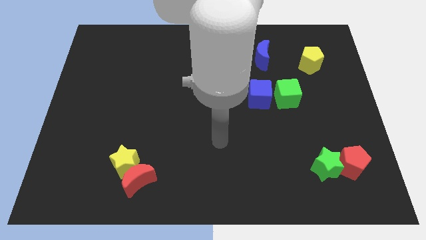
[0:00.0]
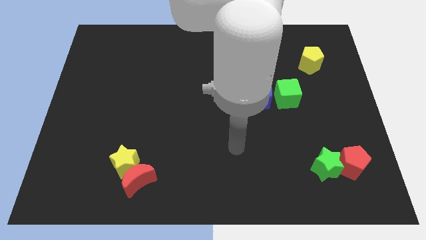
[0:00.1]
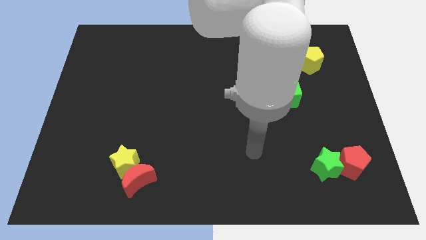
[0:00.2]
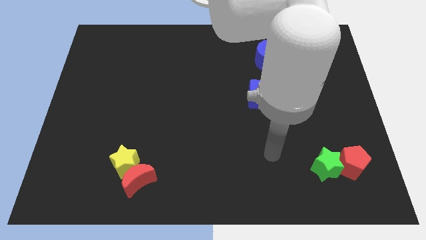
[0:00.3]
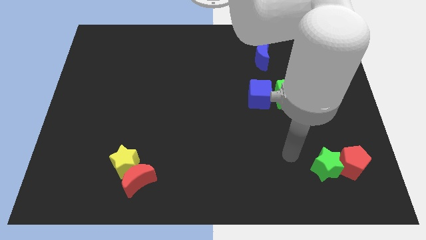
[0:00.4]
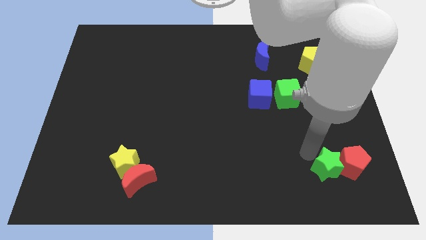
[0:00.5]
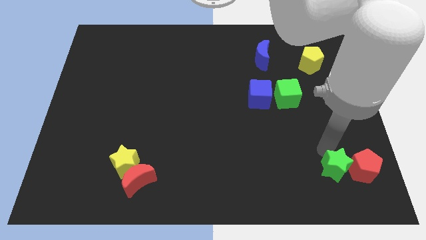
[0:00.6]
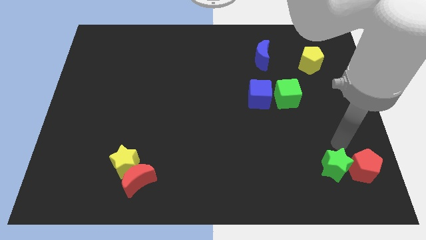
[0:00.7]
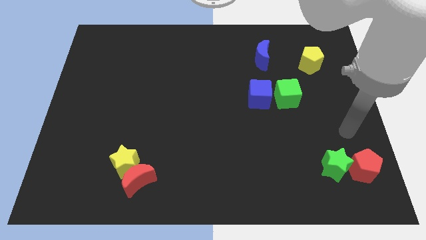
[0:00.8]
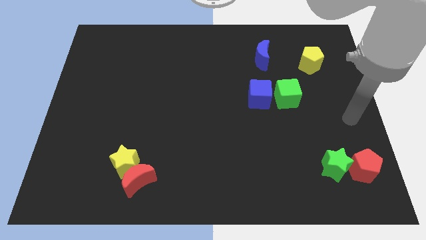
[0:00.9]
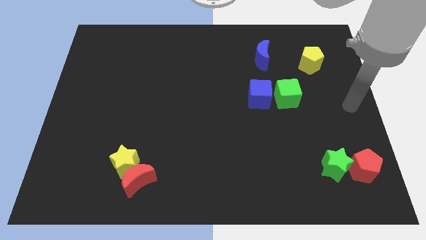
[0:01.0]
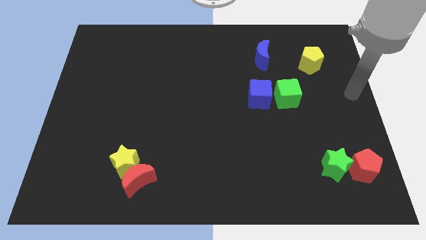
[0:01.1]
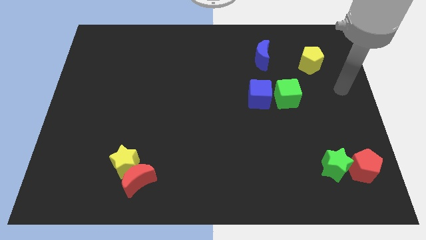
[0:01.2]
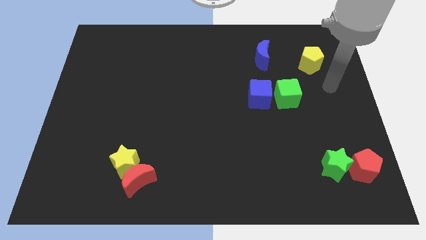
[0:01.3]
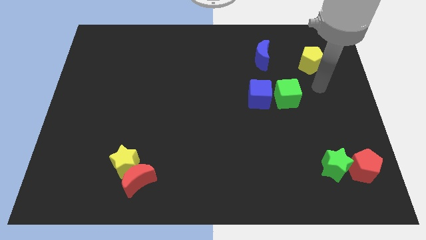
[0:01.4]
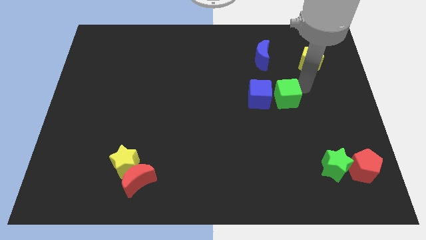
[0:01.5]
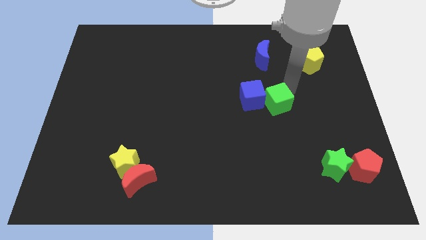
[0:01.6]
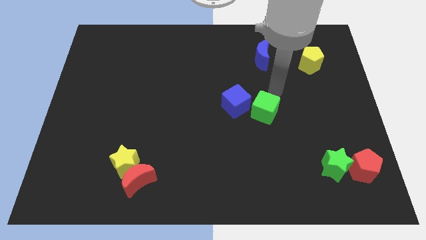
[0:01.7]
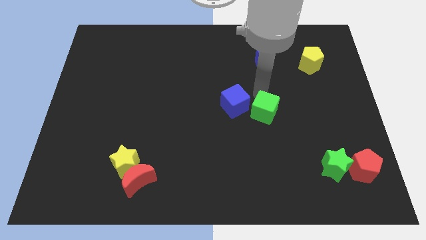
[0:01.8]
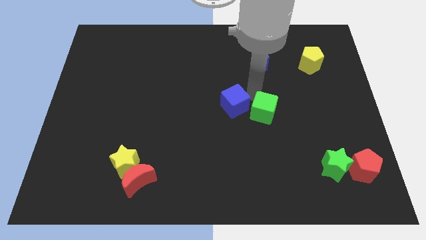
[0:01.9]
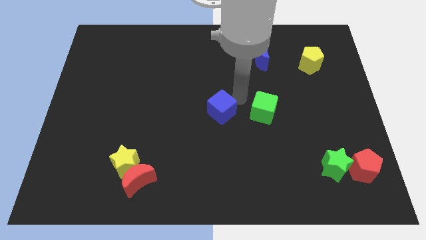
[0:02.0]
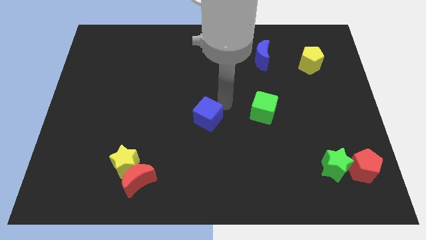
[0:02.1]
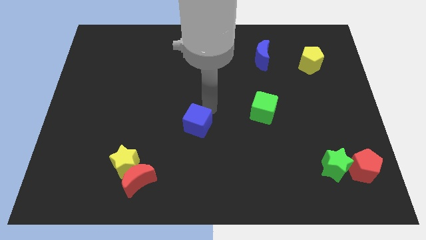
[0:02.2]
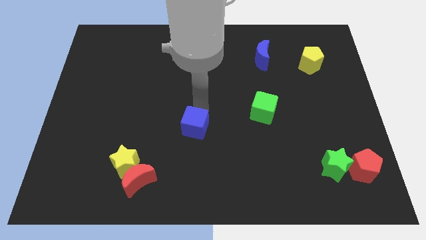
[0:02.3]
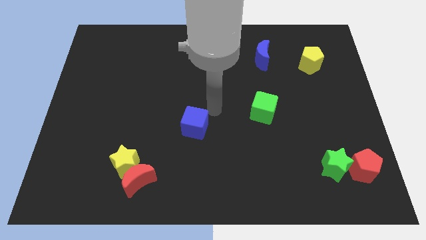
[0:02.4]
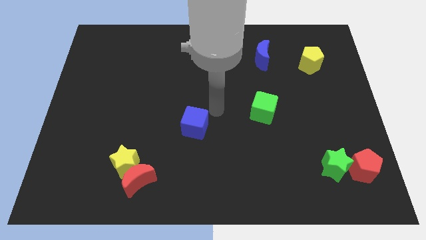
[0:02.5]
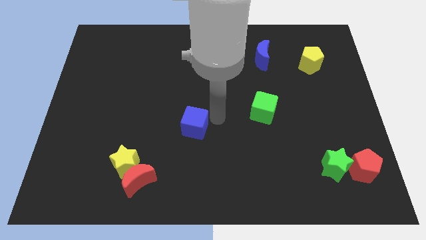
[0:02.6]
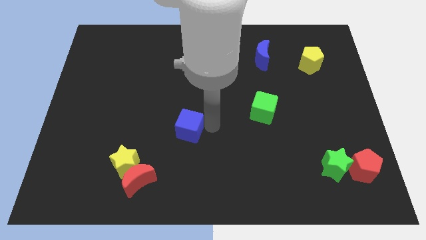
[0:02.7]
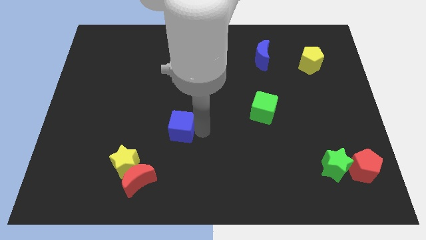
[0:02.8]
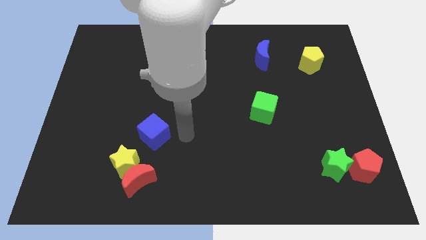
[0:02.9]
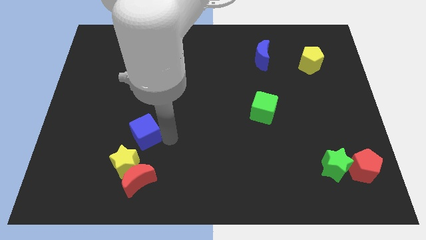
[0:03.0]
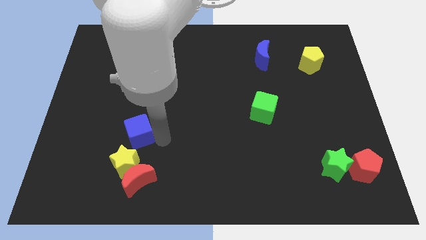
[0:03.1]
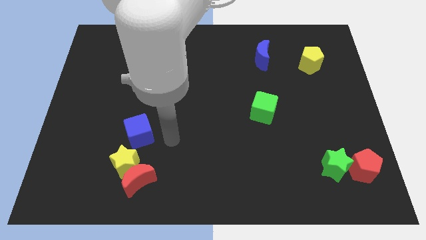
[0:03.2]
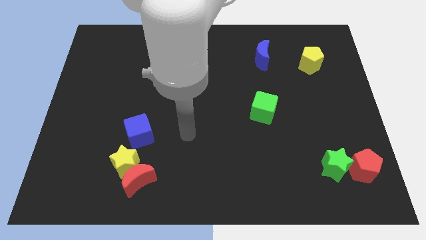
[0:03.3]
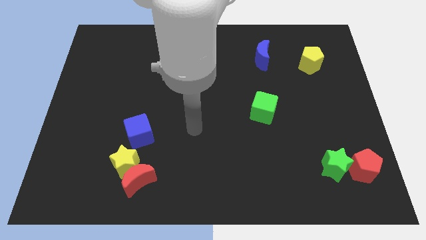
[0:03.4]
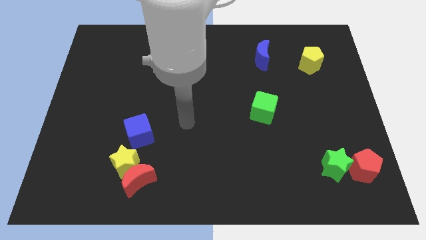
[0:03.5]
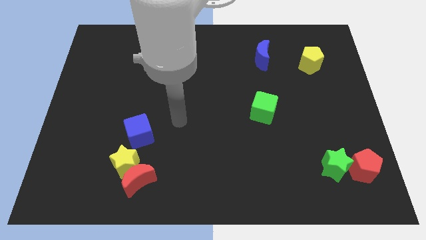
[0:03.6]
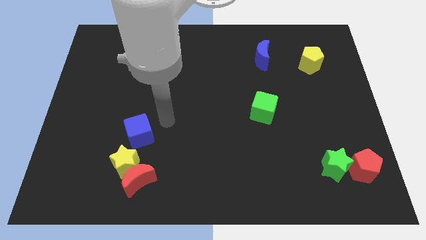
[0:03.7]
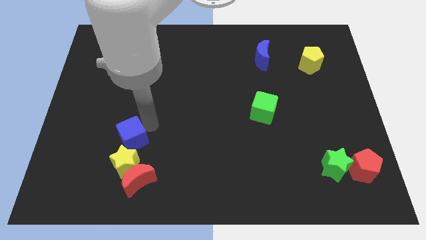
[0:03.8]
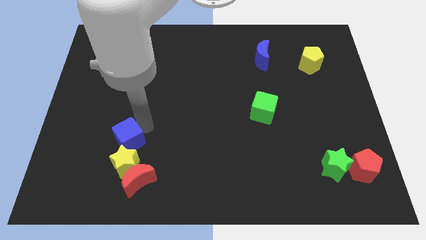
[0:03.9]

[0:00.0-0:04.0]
place the blue cube to the top side of the yellow star

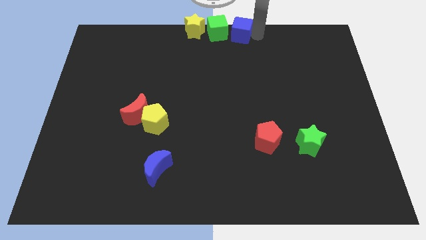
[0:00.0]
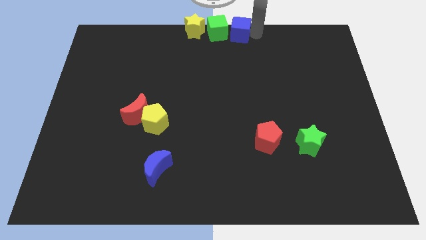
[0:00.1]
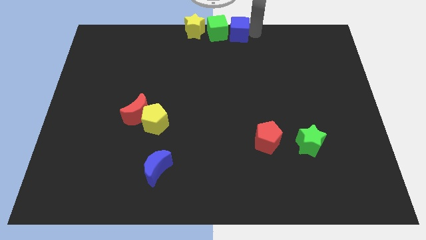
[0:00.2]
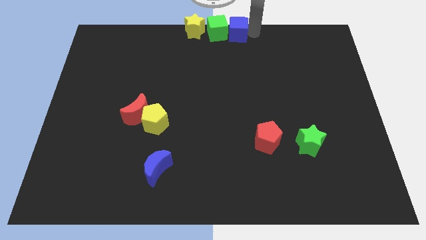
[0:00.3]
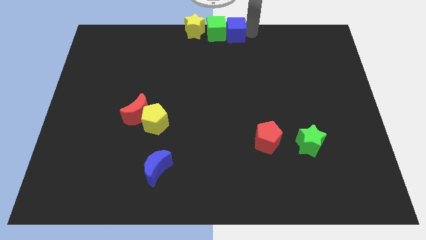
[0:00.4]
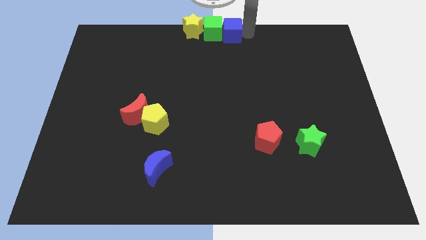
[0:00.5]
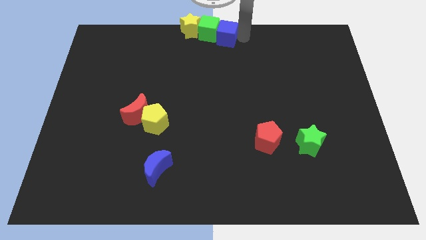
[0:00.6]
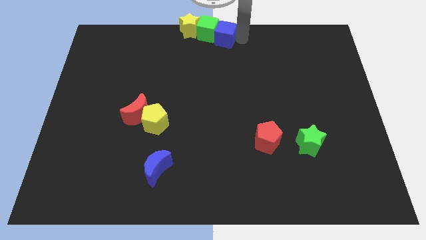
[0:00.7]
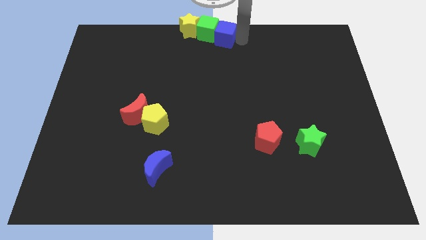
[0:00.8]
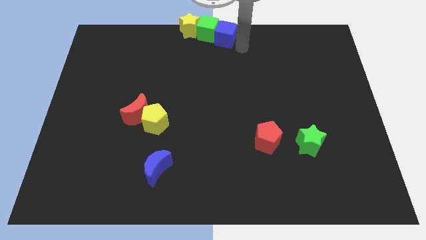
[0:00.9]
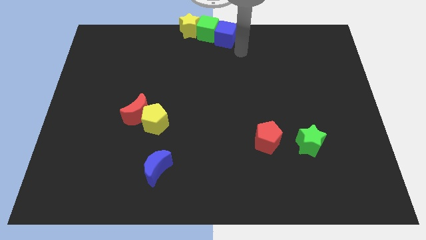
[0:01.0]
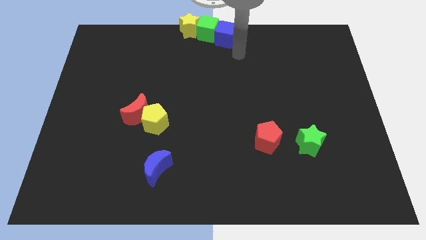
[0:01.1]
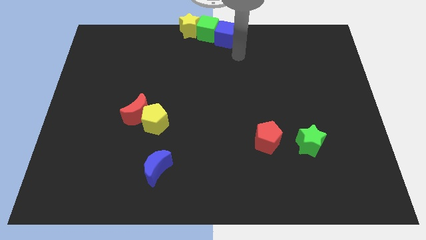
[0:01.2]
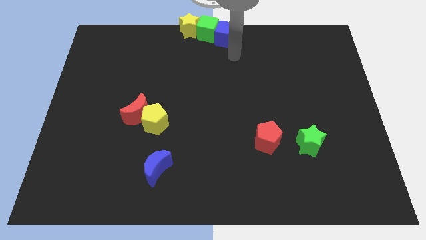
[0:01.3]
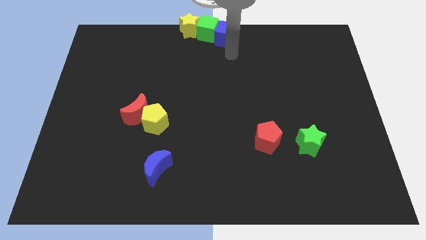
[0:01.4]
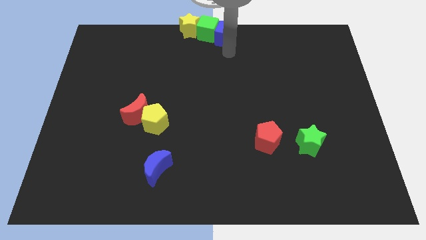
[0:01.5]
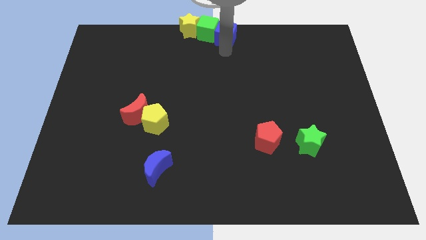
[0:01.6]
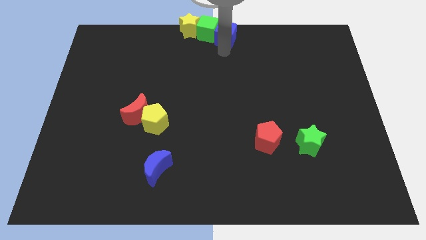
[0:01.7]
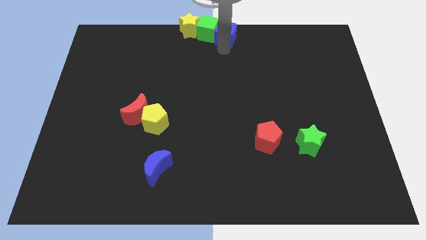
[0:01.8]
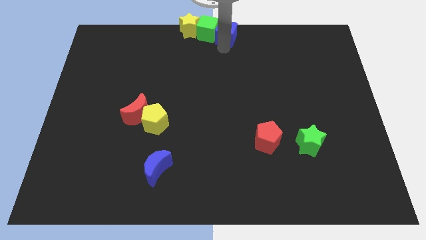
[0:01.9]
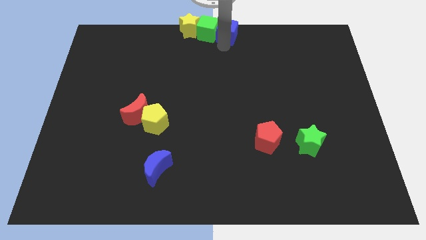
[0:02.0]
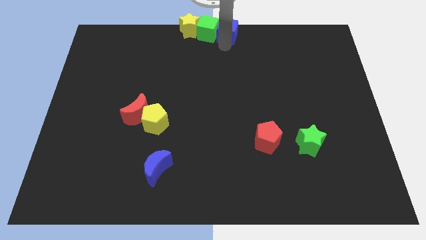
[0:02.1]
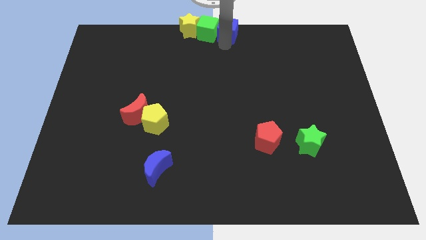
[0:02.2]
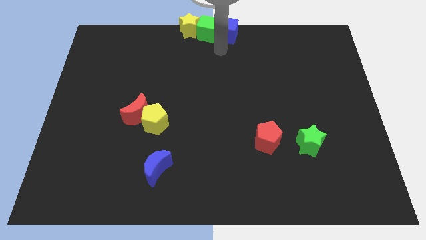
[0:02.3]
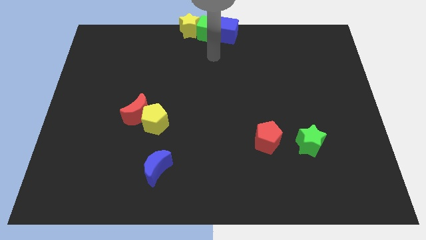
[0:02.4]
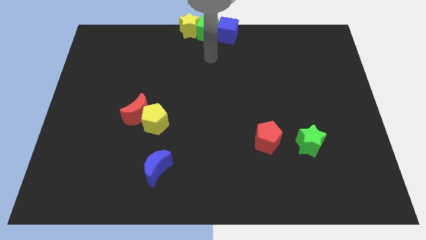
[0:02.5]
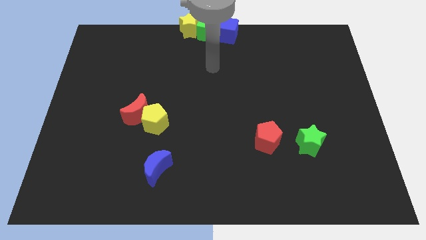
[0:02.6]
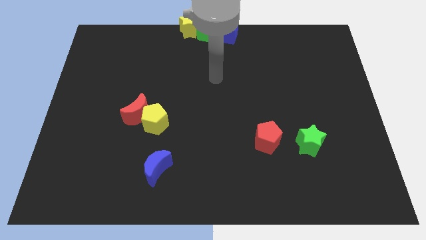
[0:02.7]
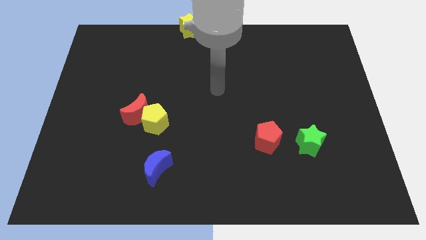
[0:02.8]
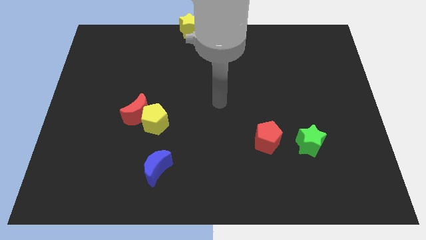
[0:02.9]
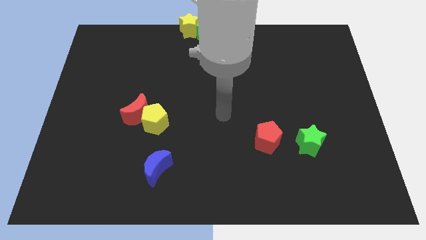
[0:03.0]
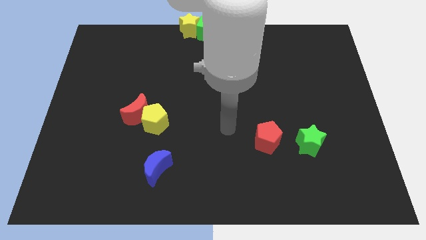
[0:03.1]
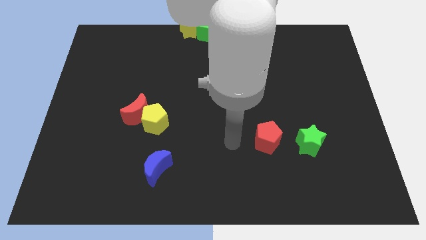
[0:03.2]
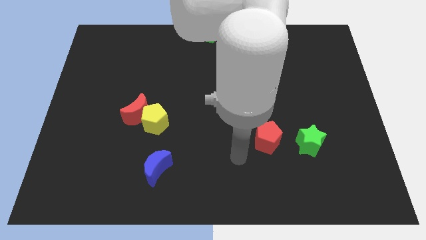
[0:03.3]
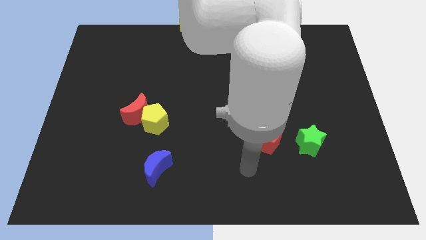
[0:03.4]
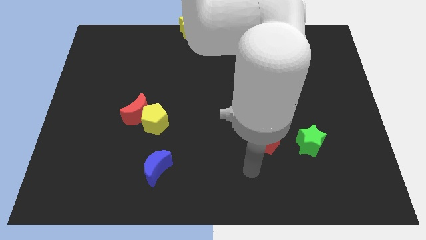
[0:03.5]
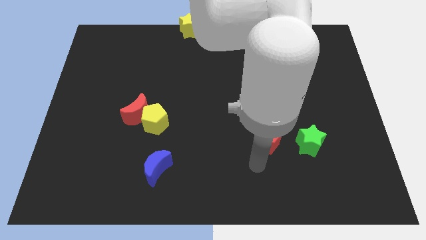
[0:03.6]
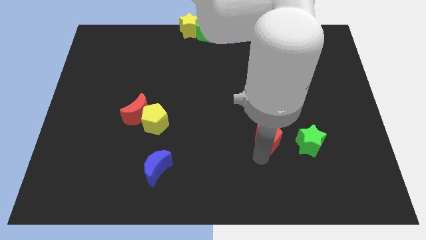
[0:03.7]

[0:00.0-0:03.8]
place your arm below red pentagon

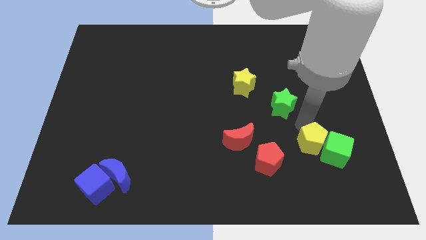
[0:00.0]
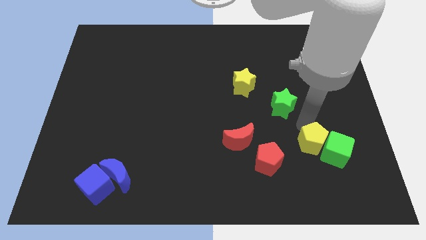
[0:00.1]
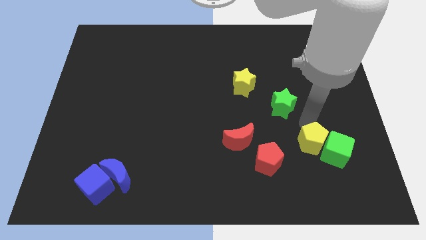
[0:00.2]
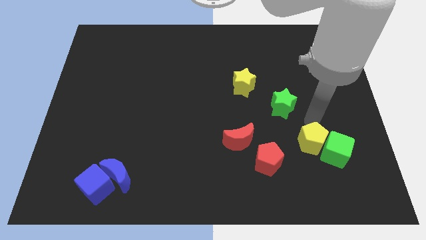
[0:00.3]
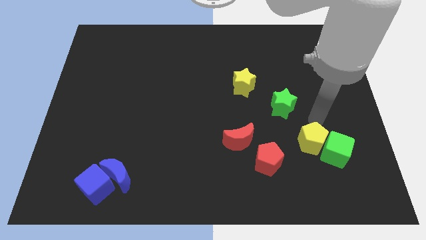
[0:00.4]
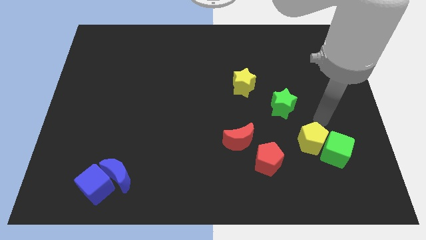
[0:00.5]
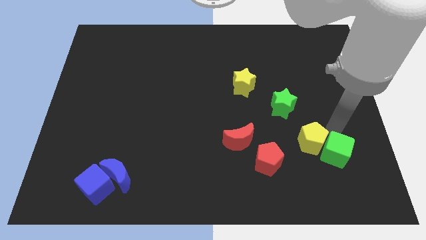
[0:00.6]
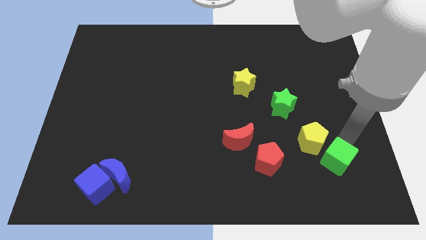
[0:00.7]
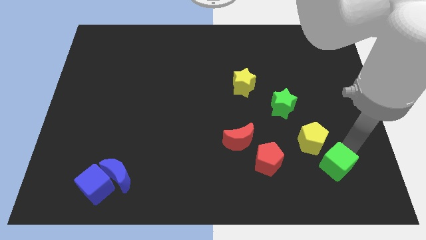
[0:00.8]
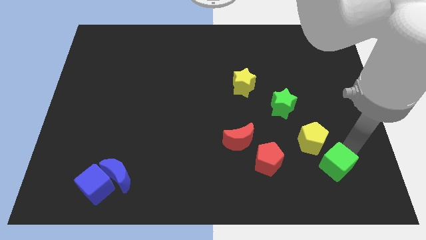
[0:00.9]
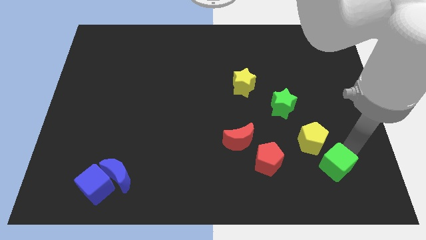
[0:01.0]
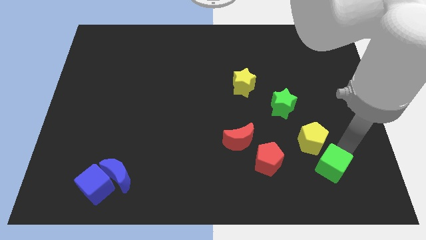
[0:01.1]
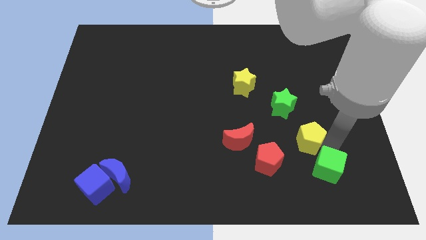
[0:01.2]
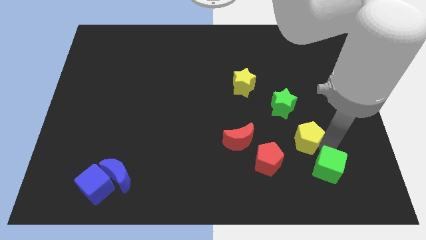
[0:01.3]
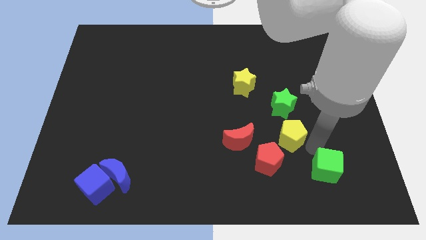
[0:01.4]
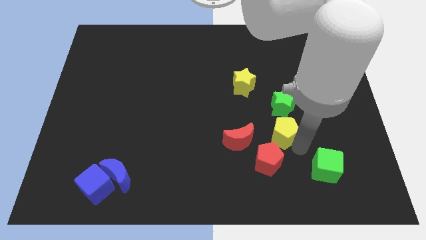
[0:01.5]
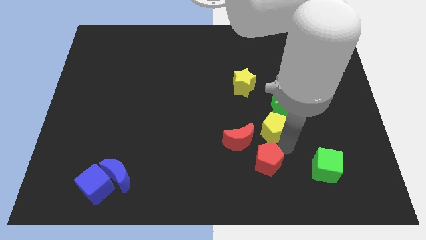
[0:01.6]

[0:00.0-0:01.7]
place the yellow pentagon vertically above the red pentagon
